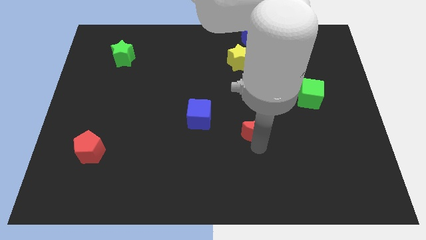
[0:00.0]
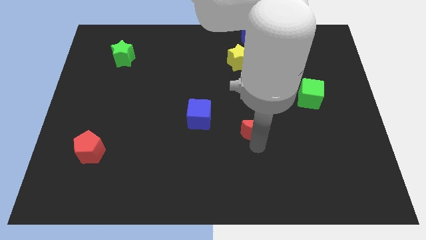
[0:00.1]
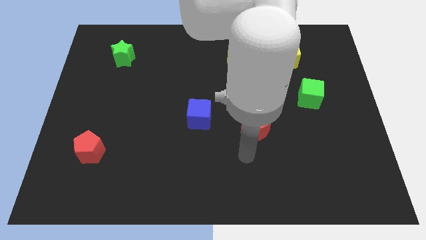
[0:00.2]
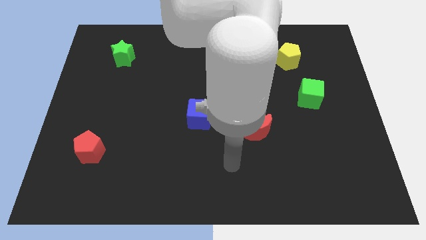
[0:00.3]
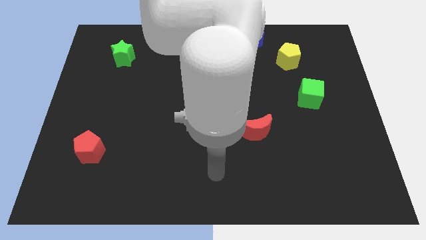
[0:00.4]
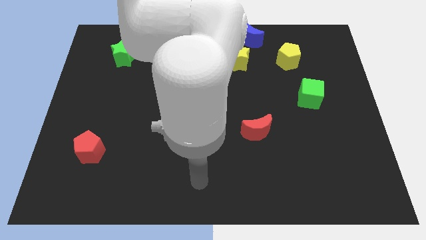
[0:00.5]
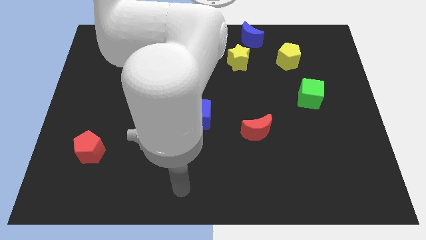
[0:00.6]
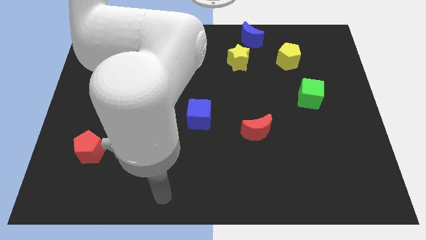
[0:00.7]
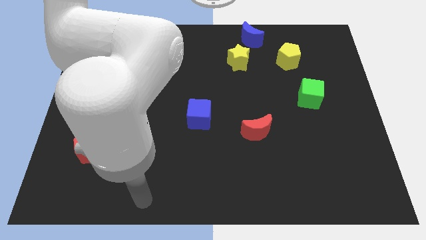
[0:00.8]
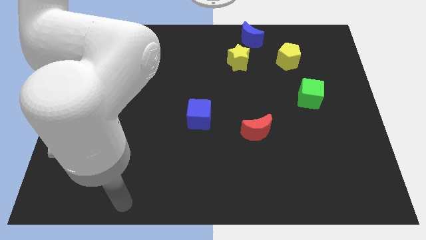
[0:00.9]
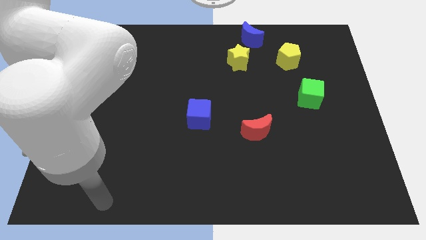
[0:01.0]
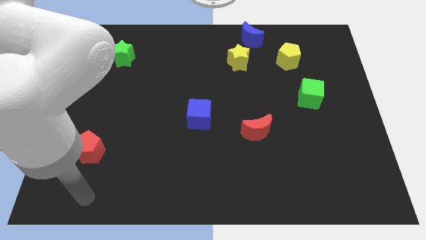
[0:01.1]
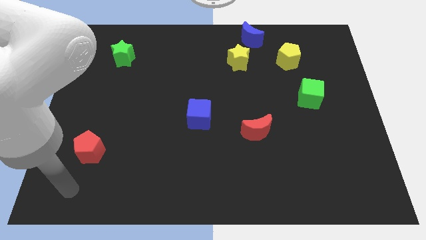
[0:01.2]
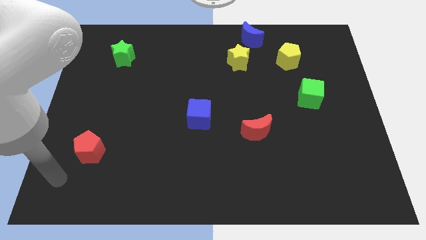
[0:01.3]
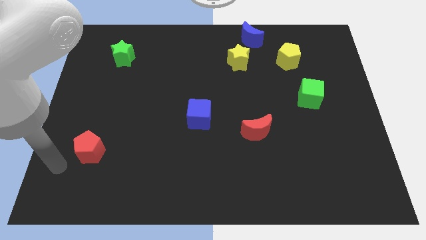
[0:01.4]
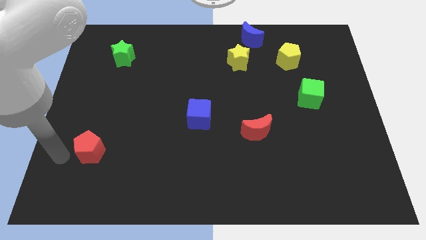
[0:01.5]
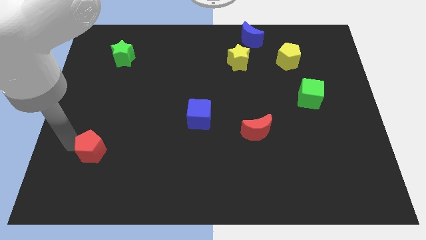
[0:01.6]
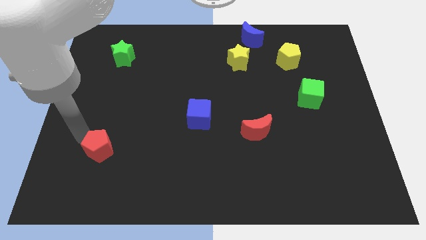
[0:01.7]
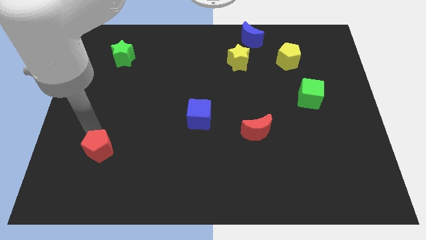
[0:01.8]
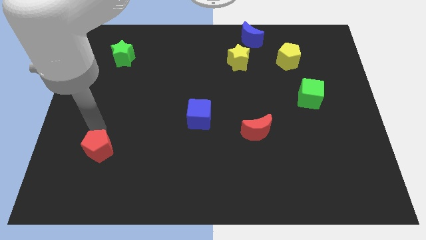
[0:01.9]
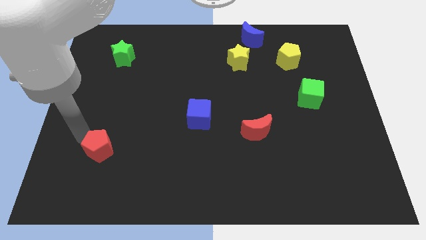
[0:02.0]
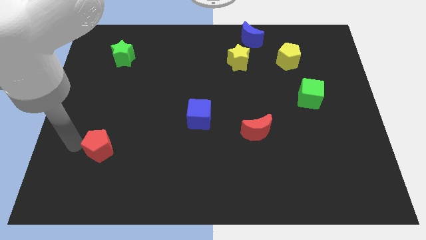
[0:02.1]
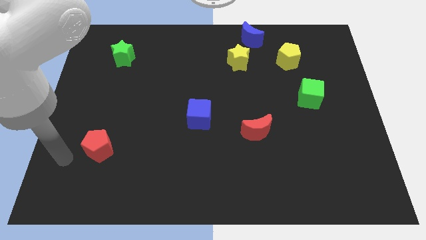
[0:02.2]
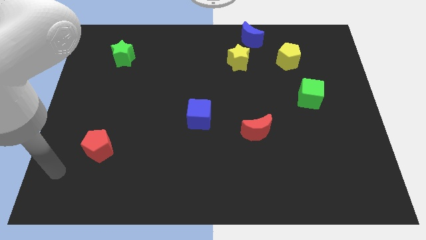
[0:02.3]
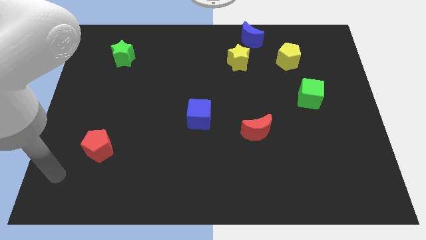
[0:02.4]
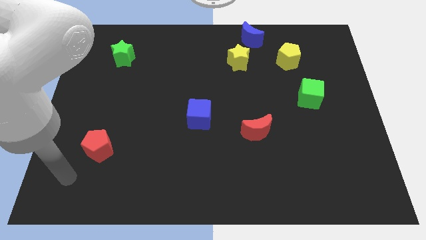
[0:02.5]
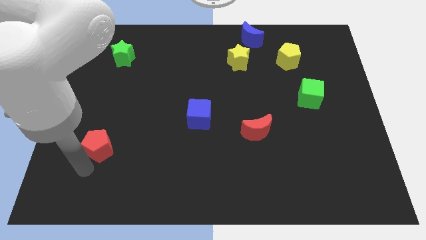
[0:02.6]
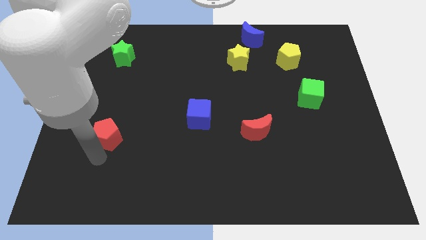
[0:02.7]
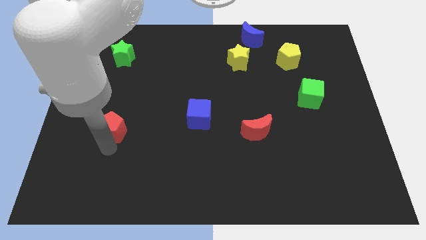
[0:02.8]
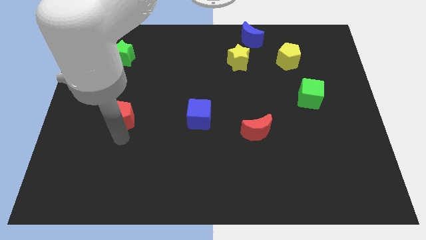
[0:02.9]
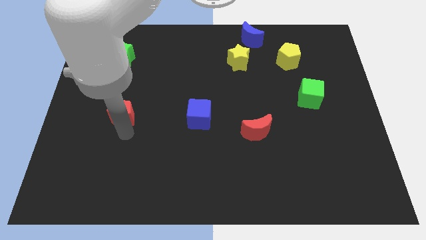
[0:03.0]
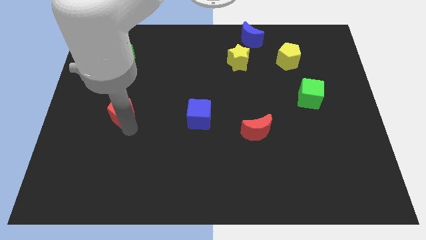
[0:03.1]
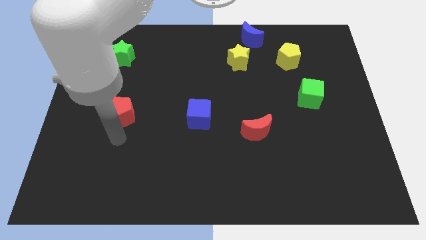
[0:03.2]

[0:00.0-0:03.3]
push the red pentagon horizontally at the left side of the blue cube

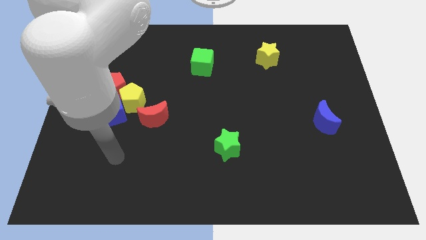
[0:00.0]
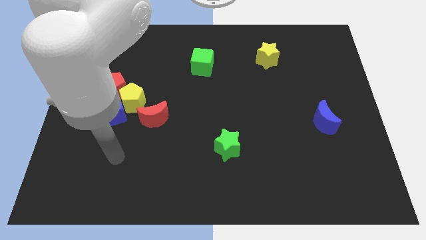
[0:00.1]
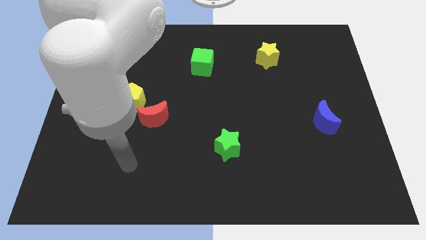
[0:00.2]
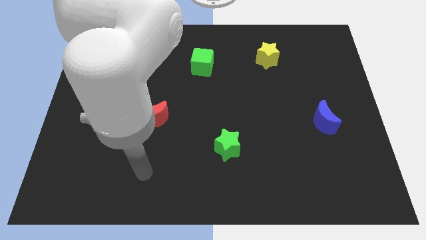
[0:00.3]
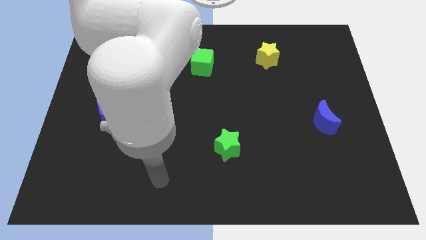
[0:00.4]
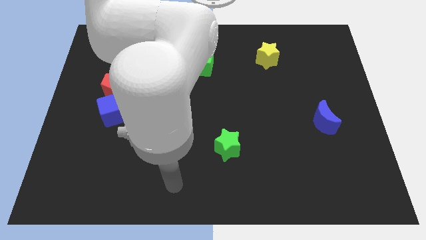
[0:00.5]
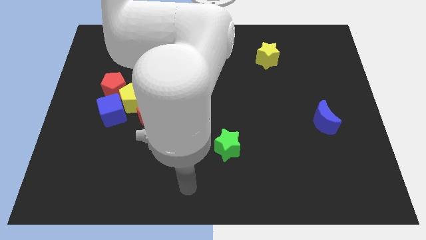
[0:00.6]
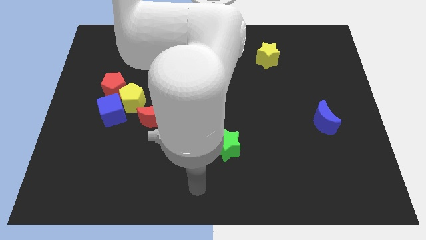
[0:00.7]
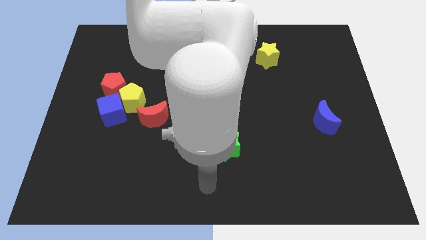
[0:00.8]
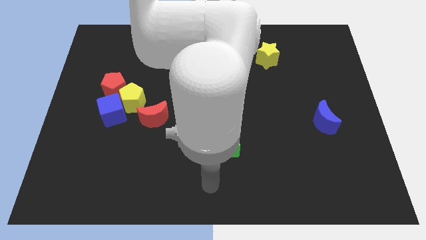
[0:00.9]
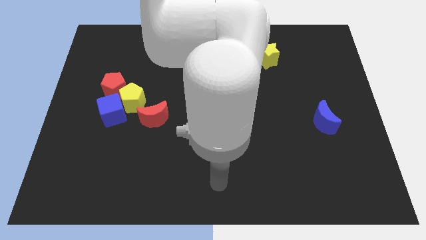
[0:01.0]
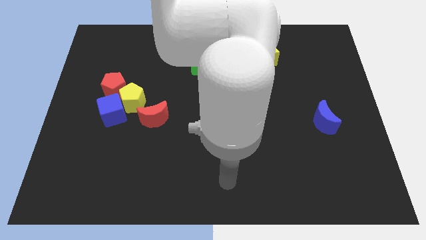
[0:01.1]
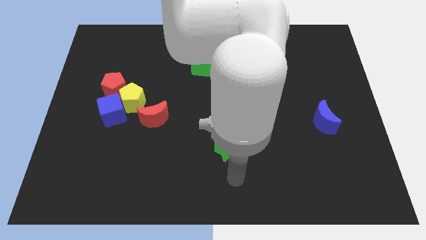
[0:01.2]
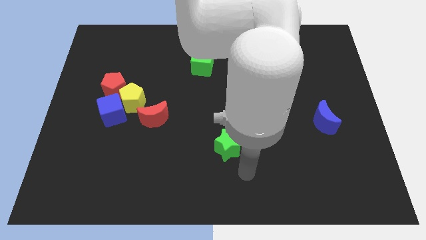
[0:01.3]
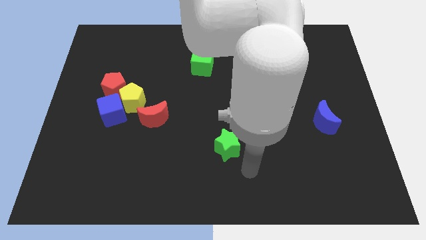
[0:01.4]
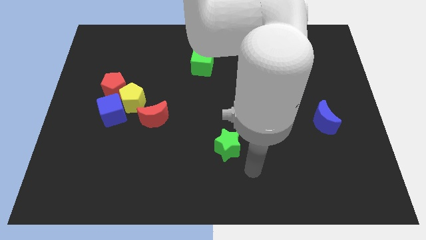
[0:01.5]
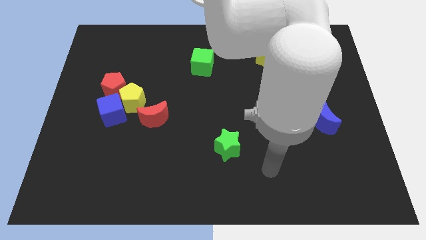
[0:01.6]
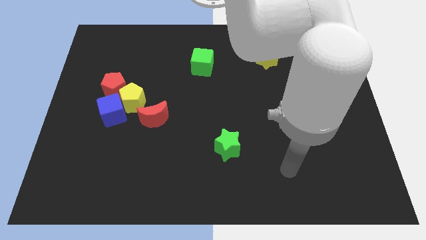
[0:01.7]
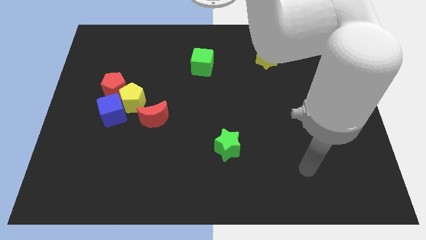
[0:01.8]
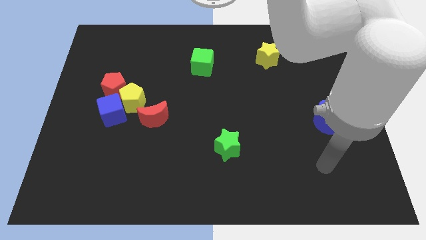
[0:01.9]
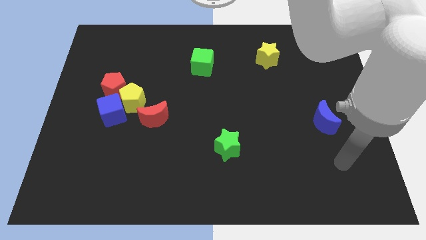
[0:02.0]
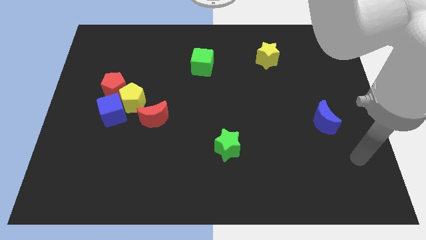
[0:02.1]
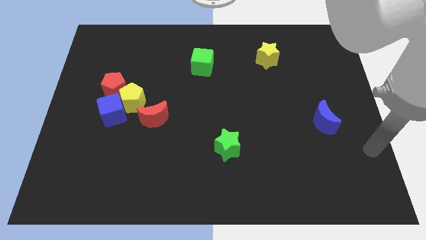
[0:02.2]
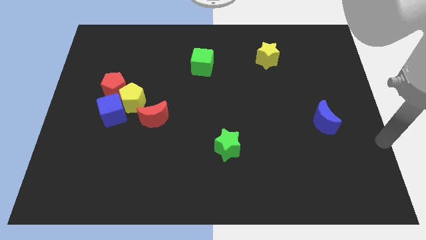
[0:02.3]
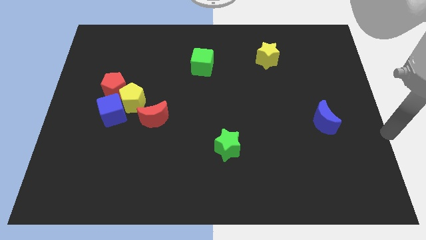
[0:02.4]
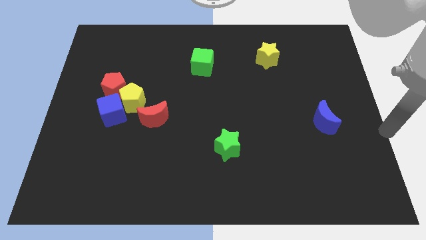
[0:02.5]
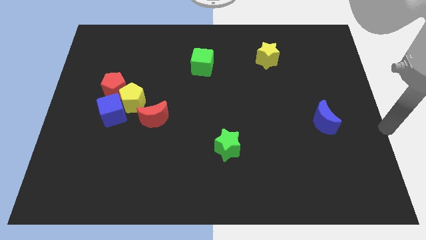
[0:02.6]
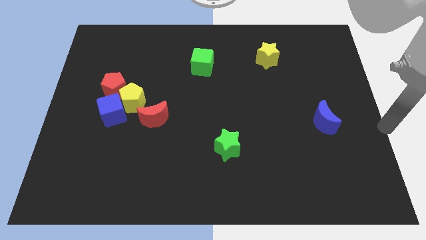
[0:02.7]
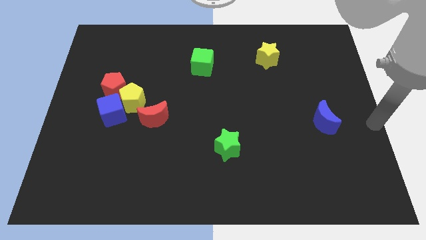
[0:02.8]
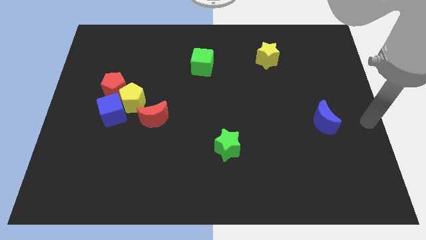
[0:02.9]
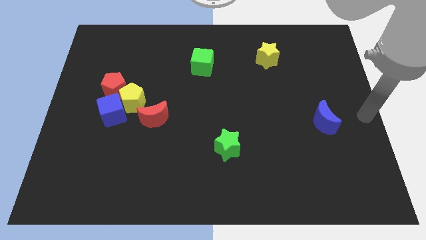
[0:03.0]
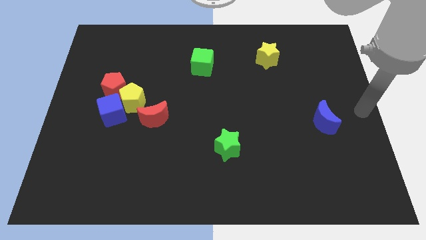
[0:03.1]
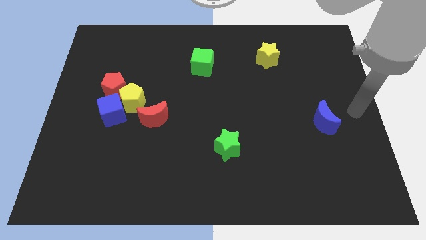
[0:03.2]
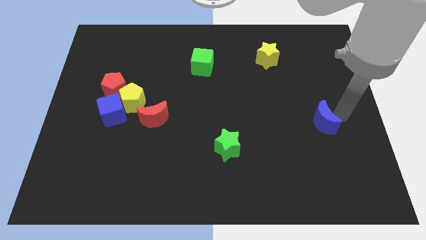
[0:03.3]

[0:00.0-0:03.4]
move the arm to the right blue moon

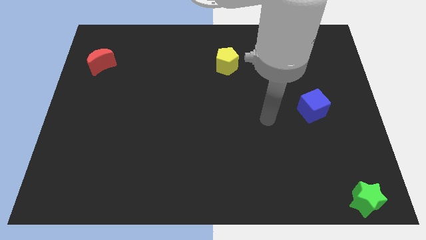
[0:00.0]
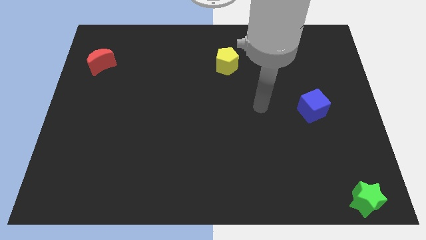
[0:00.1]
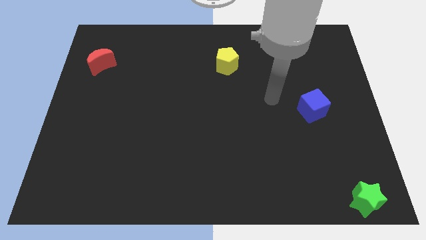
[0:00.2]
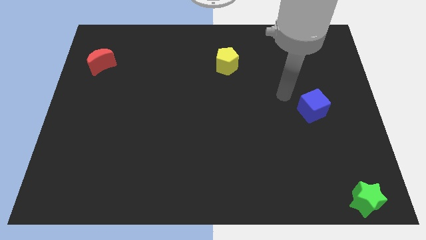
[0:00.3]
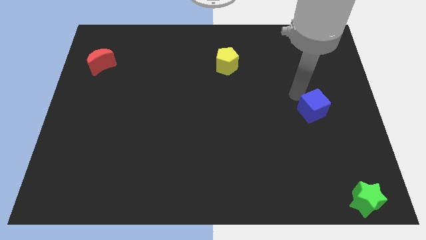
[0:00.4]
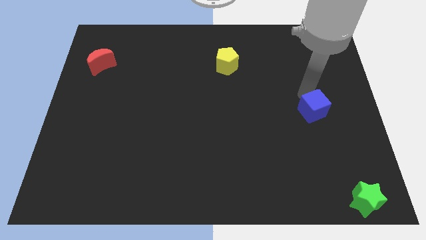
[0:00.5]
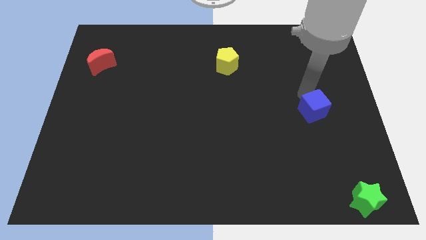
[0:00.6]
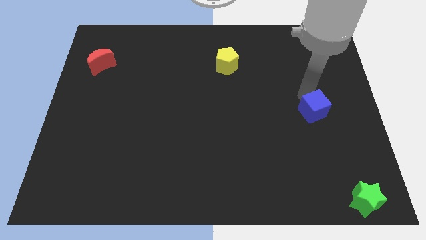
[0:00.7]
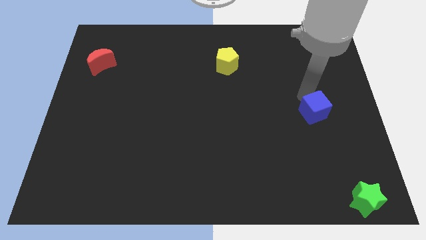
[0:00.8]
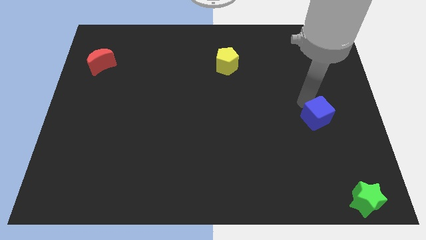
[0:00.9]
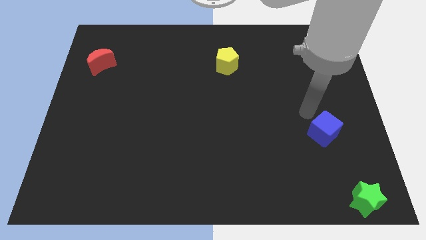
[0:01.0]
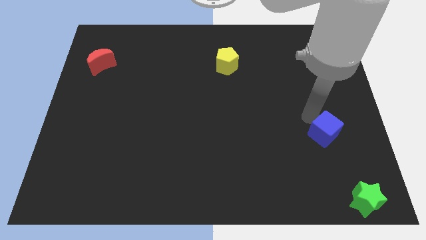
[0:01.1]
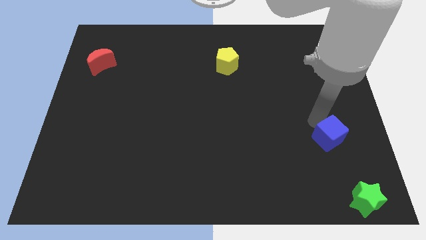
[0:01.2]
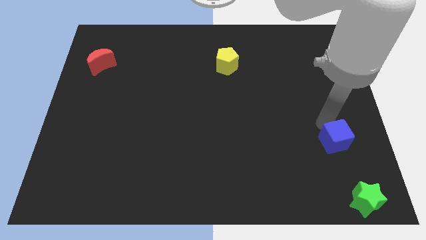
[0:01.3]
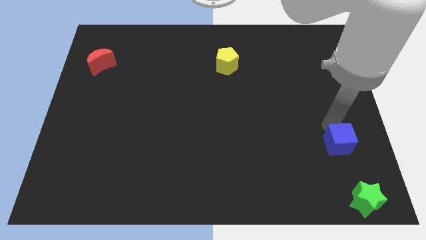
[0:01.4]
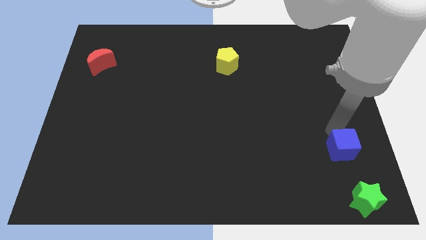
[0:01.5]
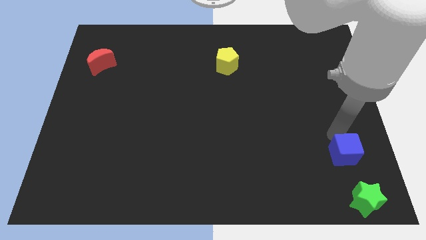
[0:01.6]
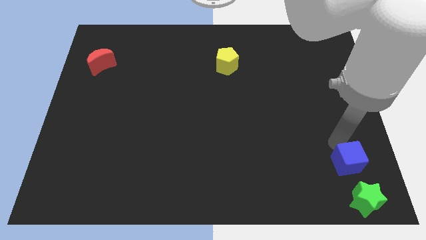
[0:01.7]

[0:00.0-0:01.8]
slide the blue cube towards the top side of the green star

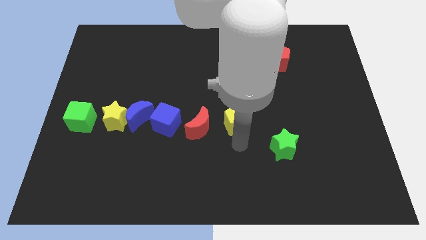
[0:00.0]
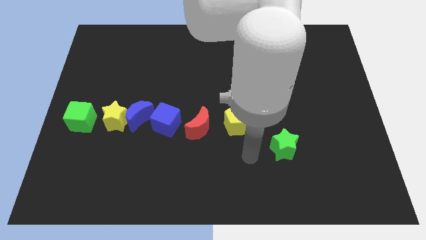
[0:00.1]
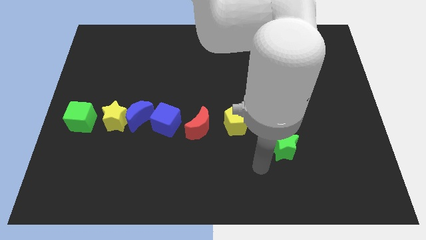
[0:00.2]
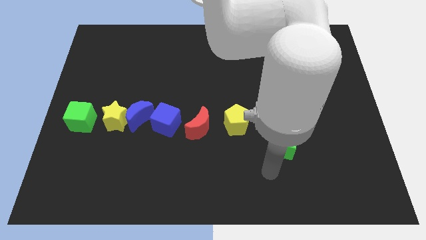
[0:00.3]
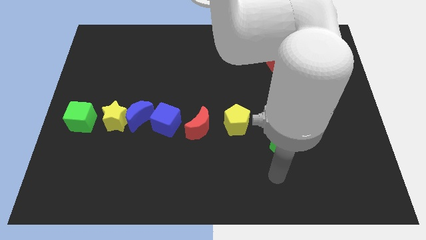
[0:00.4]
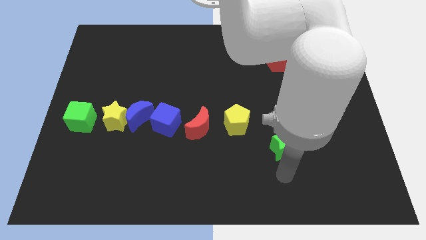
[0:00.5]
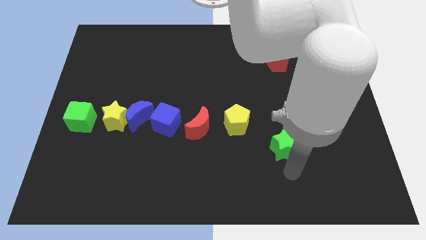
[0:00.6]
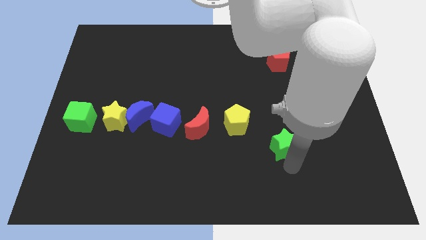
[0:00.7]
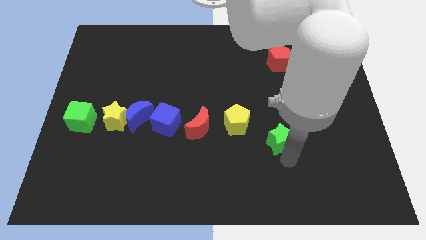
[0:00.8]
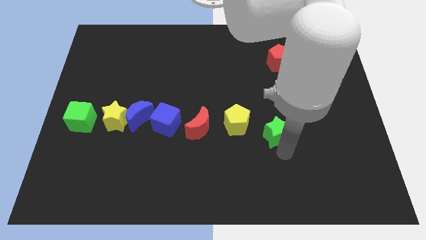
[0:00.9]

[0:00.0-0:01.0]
place your arm below green star
